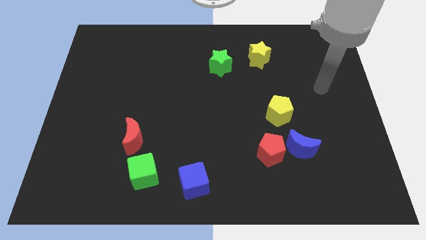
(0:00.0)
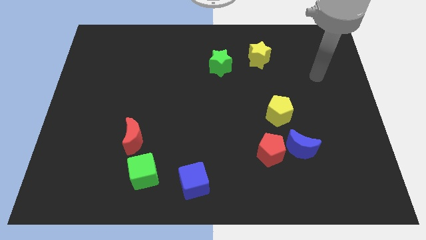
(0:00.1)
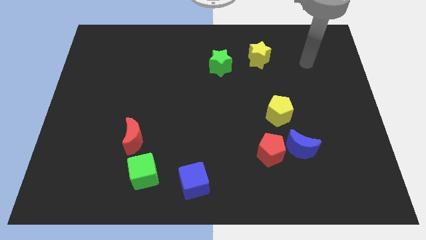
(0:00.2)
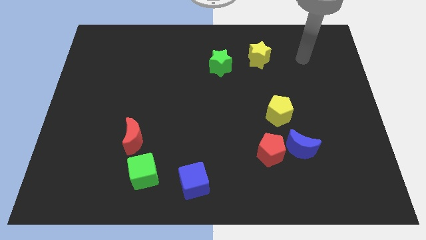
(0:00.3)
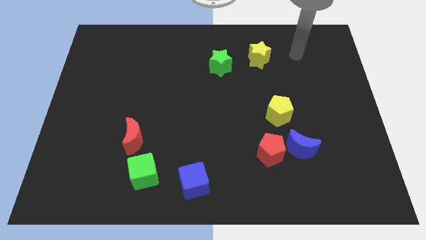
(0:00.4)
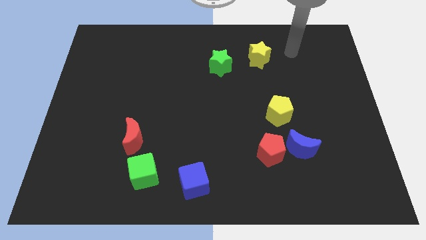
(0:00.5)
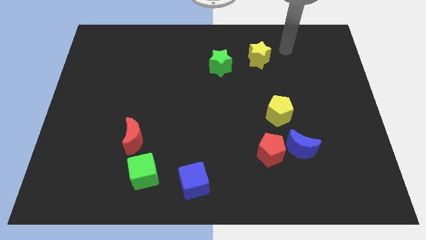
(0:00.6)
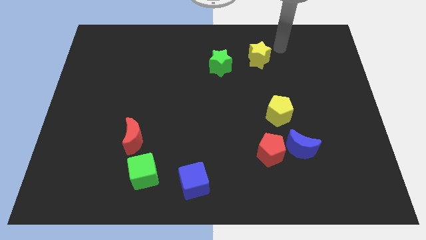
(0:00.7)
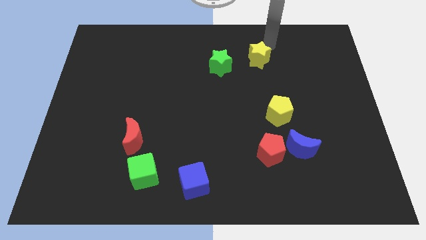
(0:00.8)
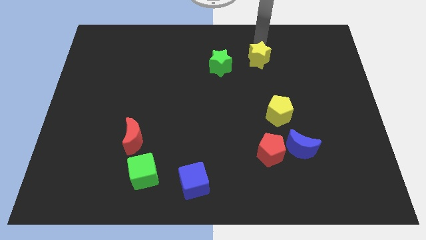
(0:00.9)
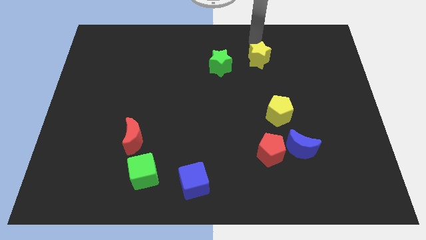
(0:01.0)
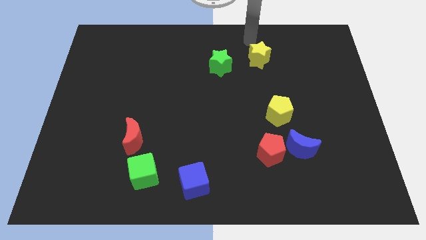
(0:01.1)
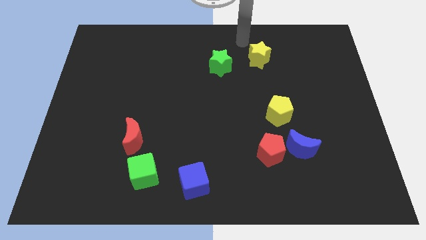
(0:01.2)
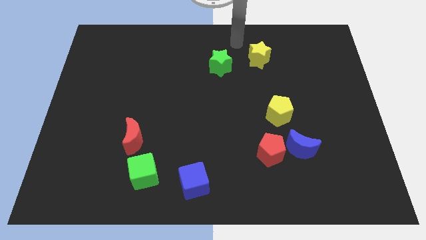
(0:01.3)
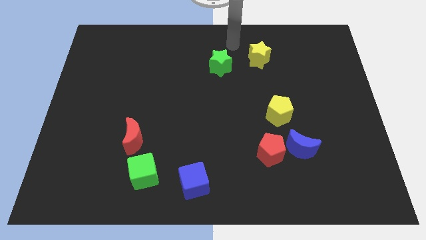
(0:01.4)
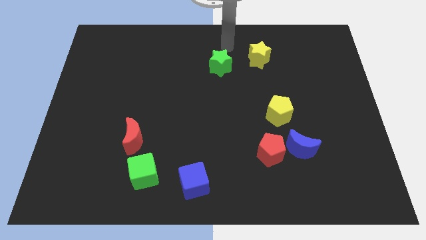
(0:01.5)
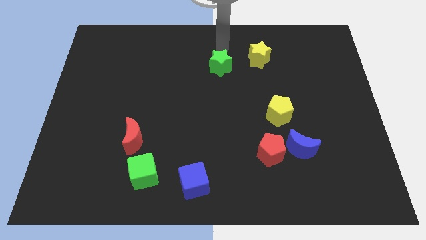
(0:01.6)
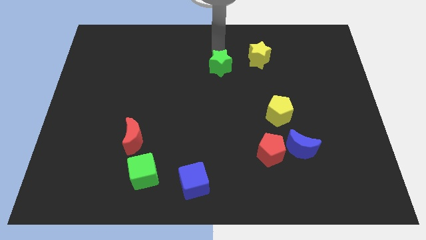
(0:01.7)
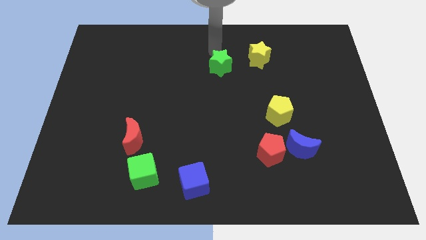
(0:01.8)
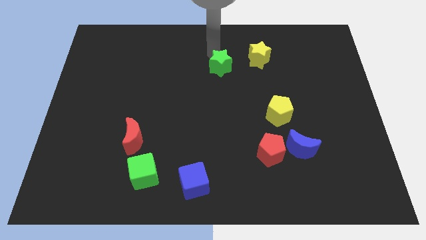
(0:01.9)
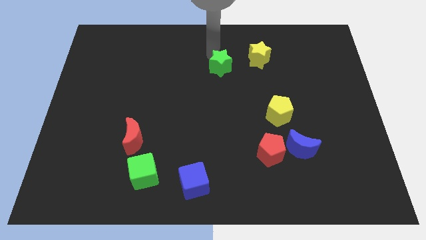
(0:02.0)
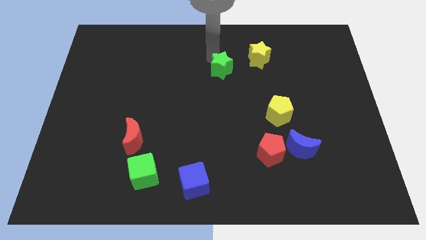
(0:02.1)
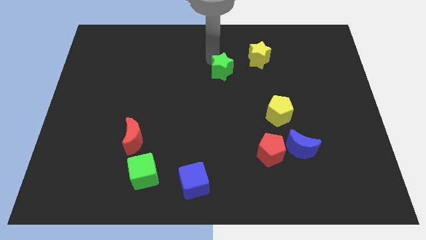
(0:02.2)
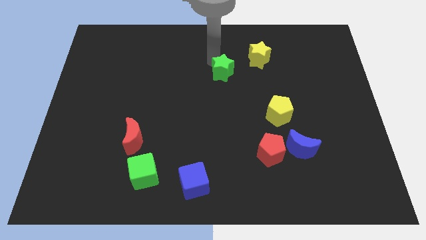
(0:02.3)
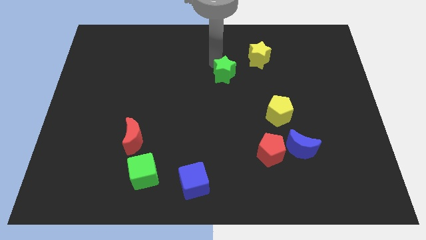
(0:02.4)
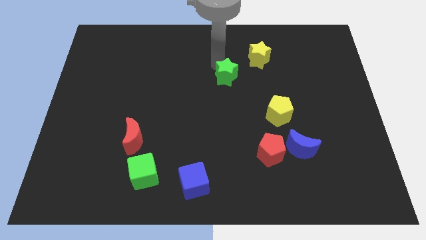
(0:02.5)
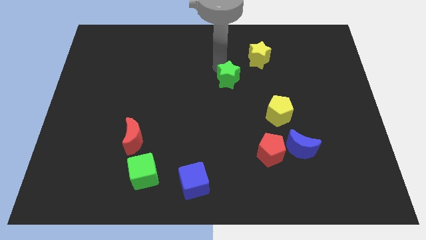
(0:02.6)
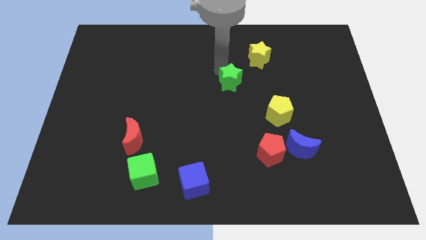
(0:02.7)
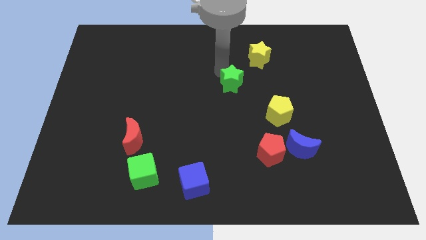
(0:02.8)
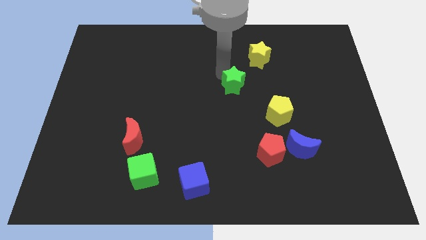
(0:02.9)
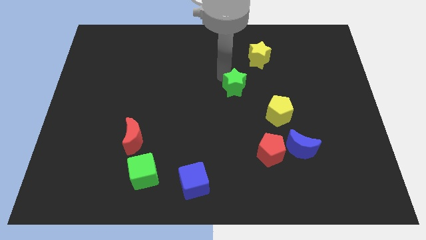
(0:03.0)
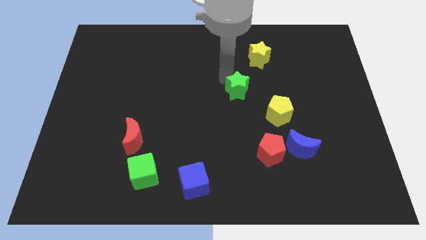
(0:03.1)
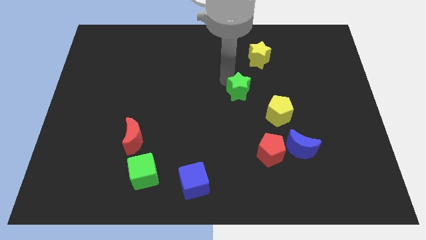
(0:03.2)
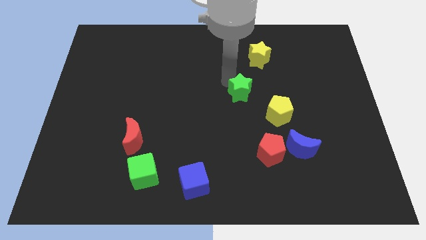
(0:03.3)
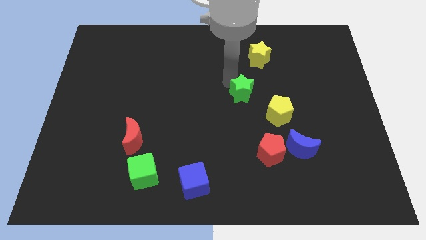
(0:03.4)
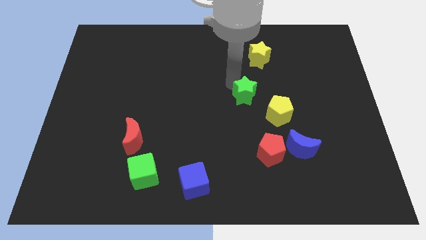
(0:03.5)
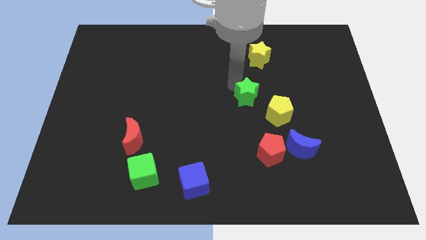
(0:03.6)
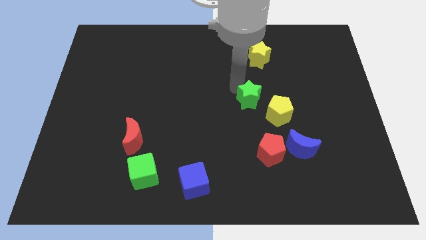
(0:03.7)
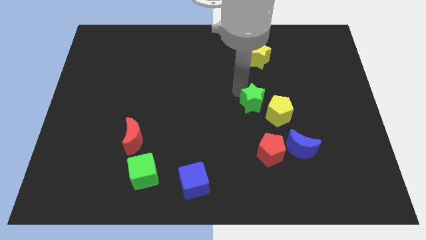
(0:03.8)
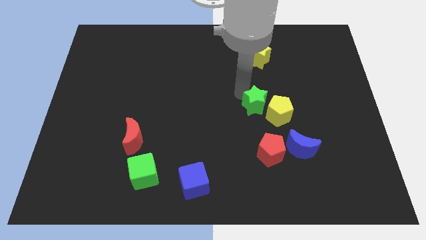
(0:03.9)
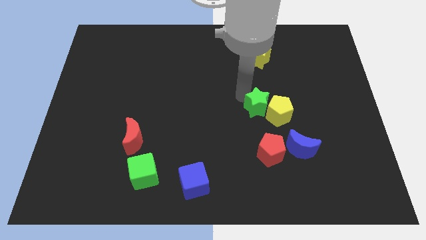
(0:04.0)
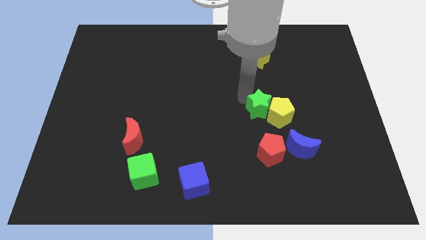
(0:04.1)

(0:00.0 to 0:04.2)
push the green star towards the yellow pentagon

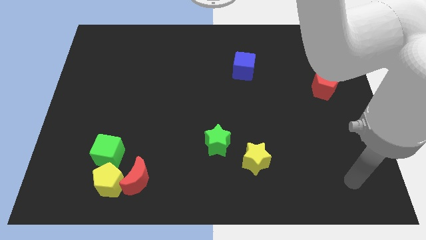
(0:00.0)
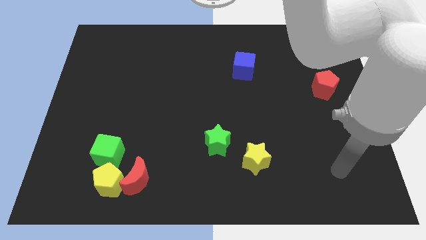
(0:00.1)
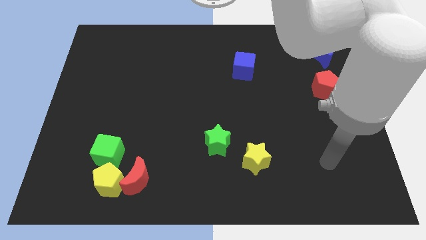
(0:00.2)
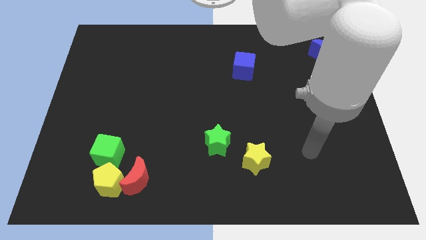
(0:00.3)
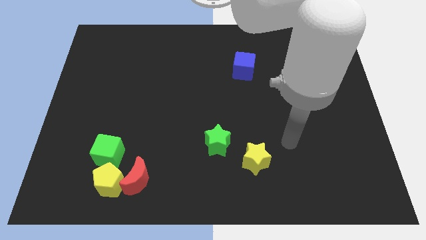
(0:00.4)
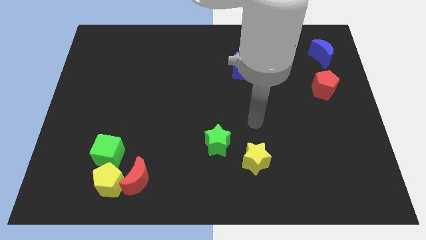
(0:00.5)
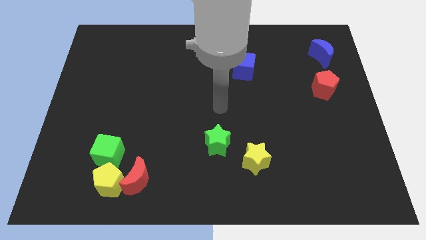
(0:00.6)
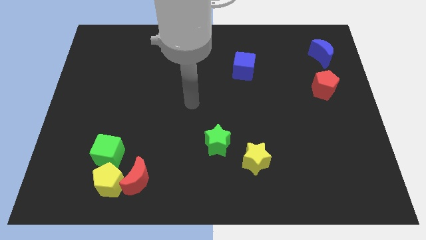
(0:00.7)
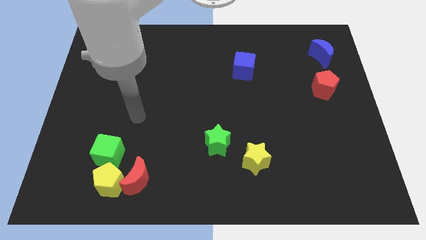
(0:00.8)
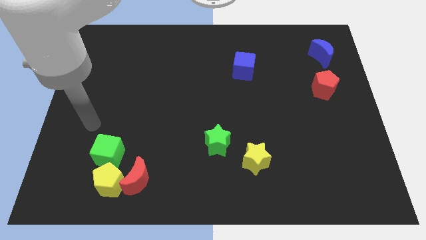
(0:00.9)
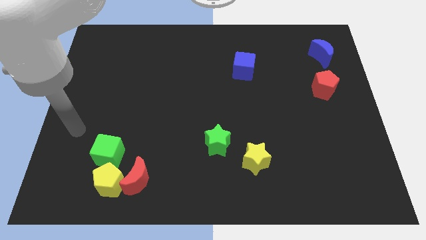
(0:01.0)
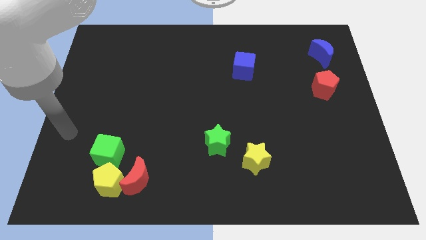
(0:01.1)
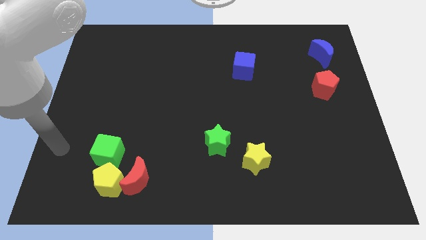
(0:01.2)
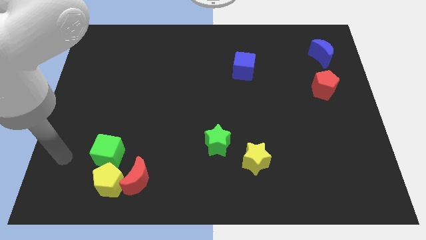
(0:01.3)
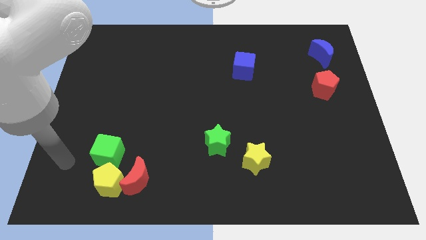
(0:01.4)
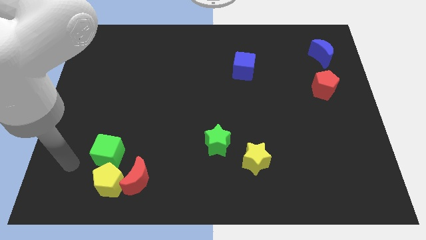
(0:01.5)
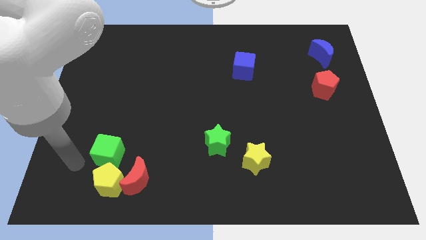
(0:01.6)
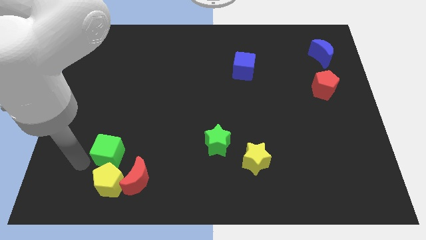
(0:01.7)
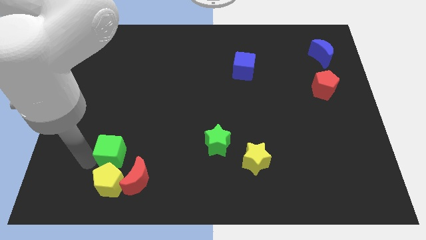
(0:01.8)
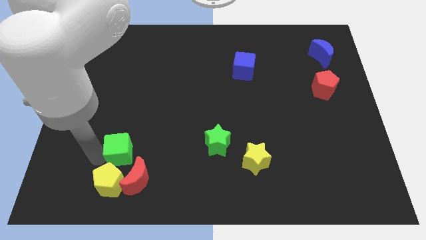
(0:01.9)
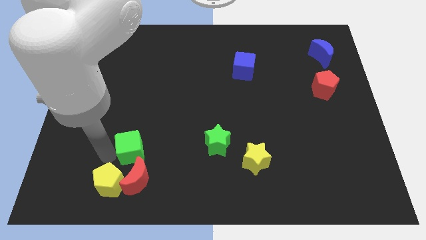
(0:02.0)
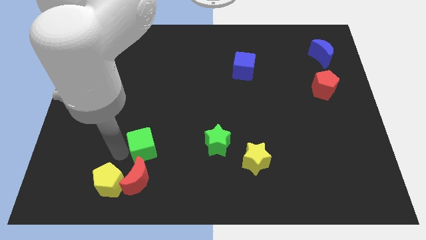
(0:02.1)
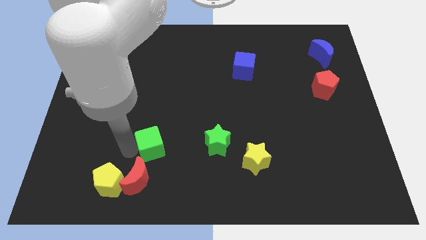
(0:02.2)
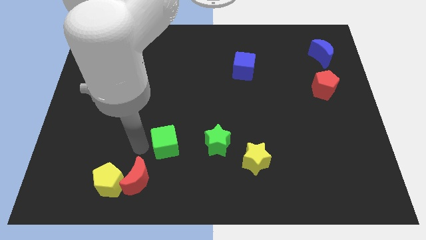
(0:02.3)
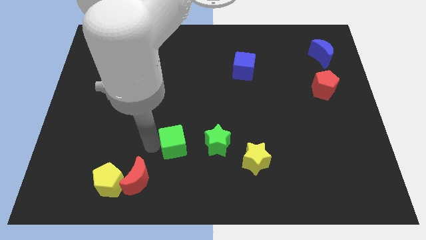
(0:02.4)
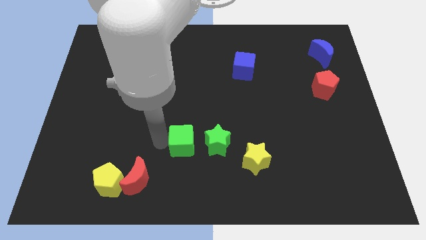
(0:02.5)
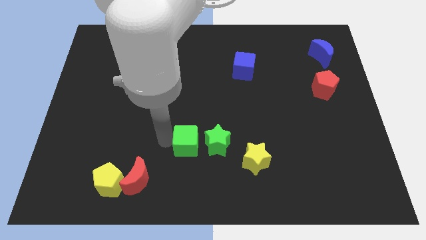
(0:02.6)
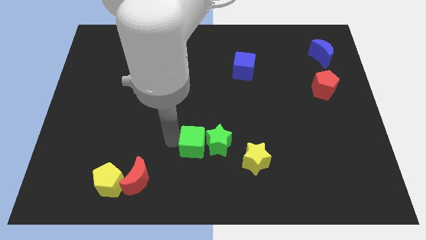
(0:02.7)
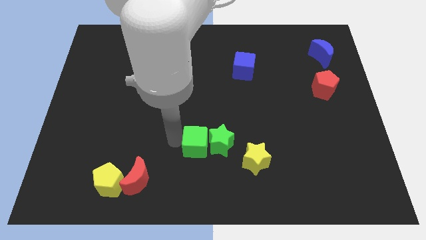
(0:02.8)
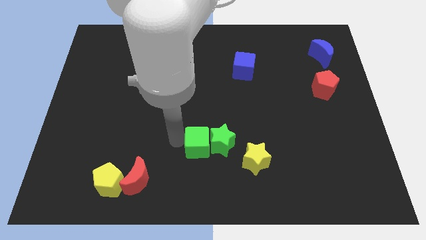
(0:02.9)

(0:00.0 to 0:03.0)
put the green cube close to the green star

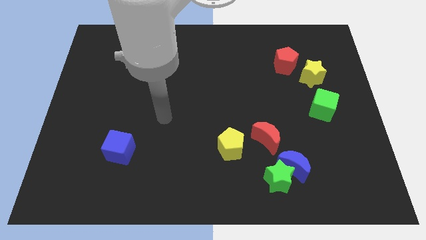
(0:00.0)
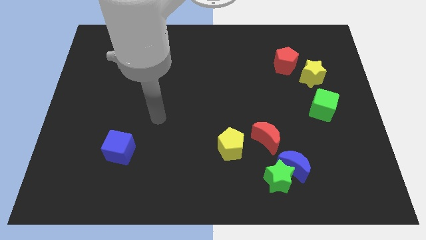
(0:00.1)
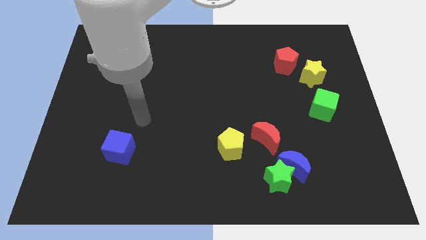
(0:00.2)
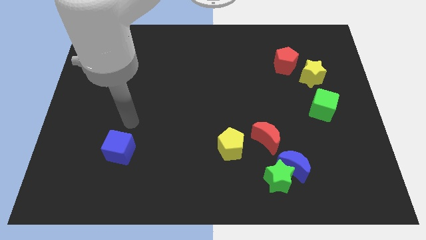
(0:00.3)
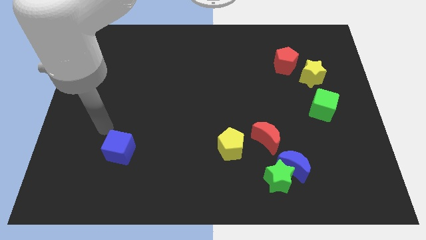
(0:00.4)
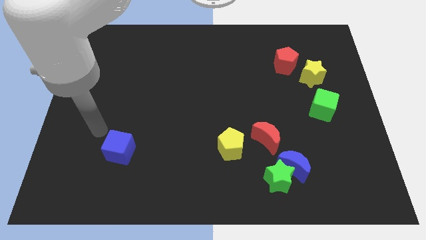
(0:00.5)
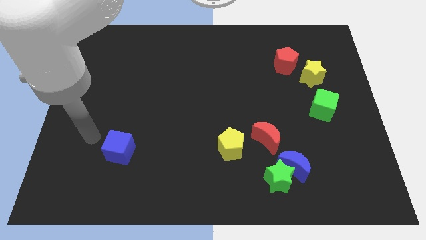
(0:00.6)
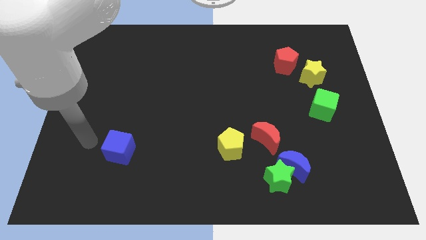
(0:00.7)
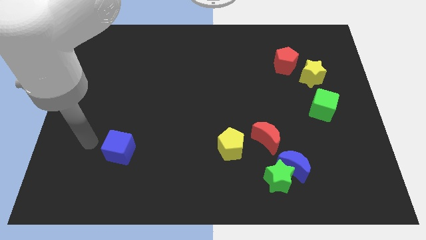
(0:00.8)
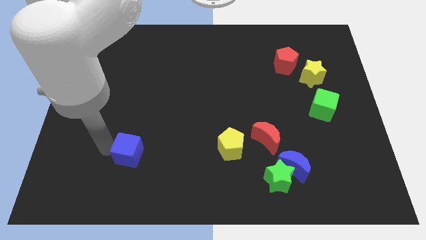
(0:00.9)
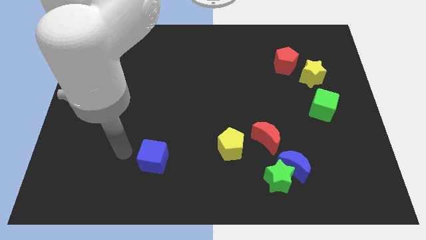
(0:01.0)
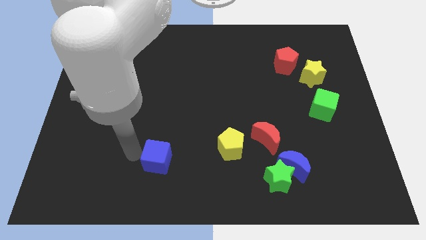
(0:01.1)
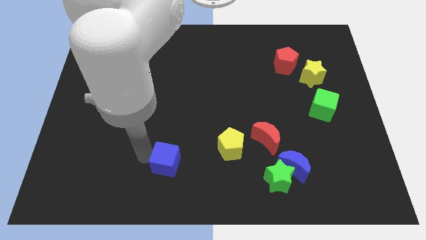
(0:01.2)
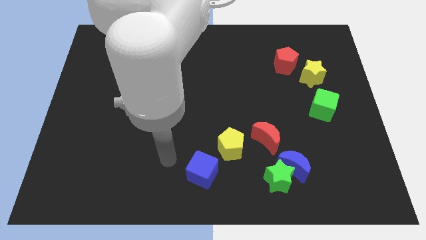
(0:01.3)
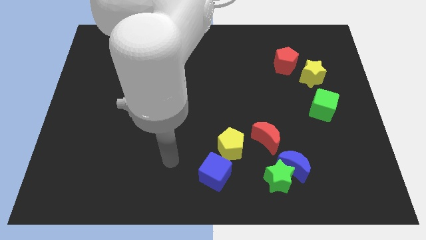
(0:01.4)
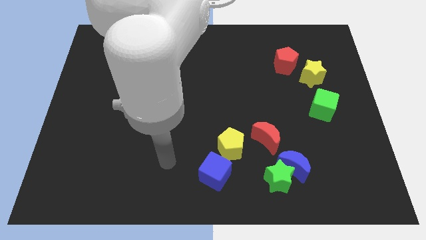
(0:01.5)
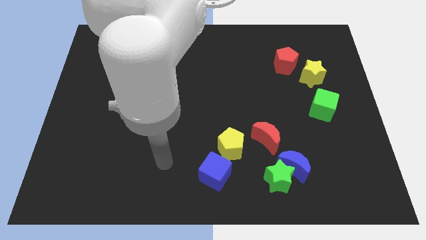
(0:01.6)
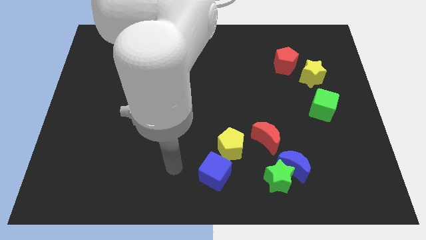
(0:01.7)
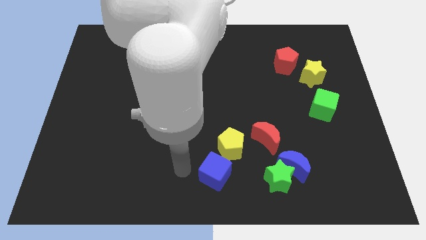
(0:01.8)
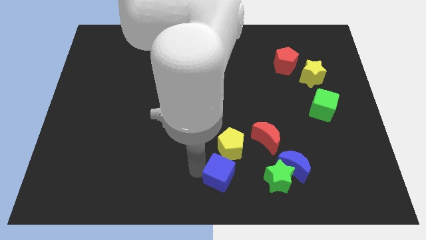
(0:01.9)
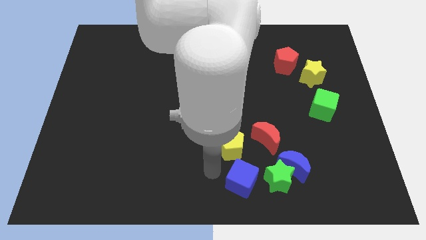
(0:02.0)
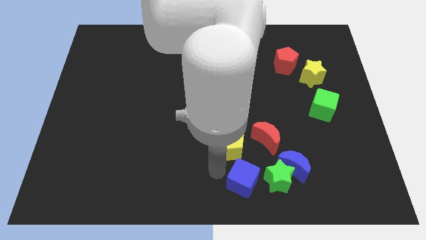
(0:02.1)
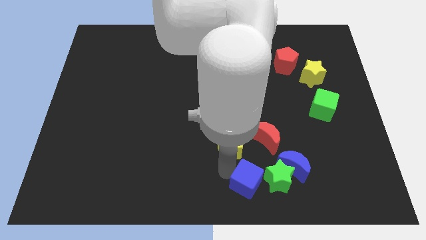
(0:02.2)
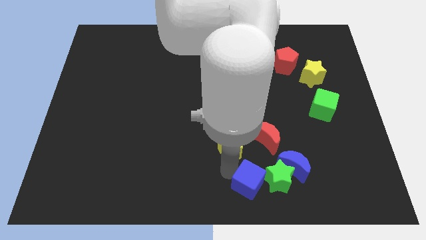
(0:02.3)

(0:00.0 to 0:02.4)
push the blue cube close to the green star
